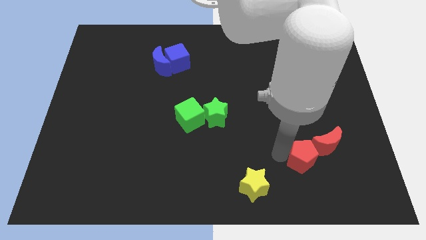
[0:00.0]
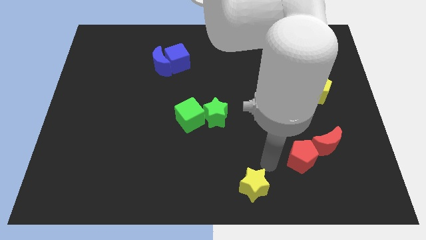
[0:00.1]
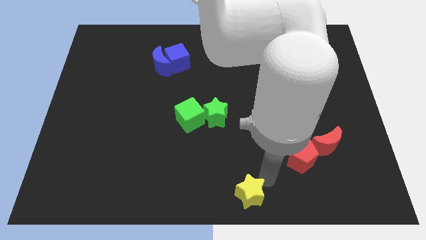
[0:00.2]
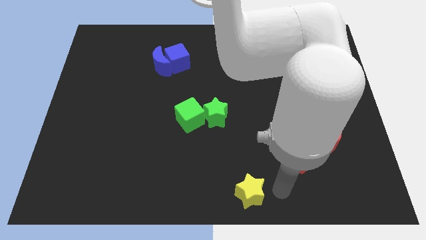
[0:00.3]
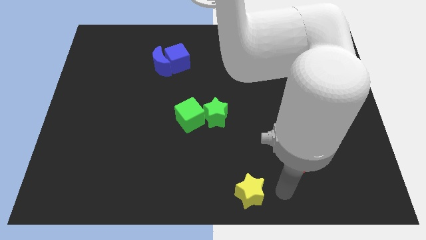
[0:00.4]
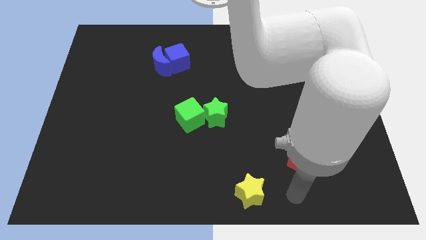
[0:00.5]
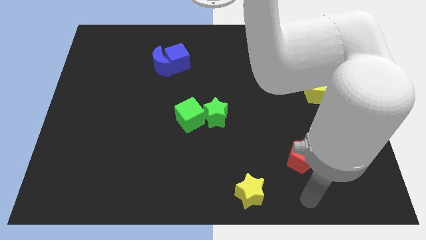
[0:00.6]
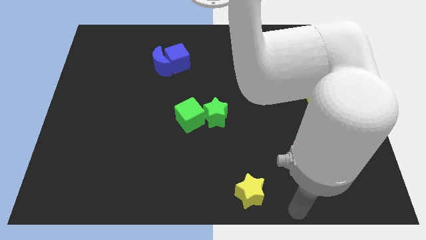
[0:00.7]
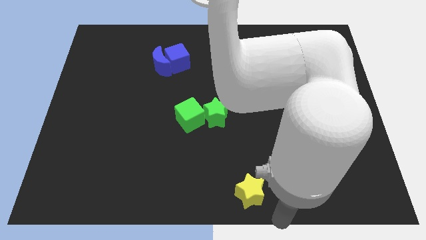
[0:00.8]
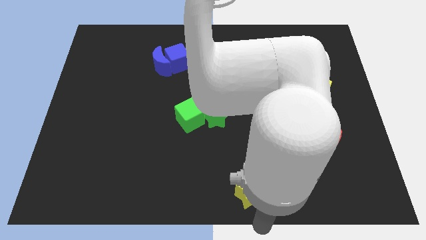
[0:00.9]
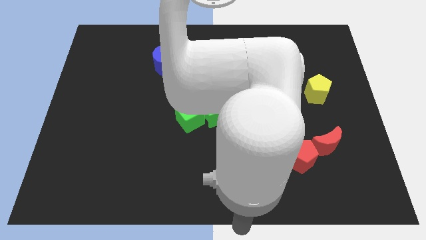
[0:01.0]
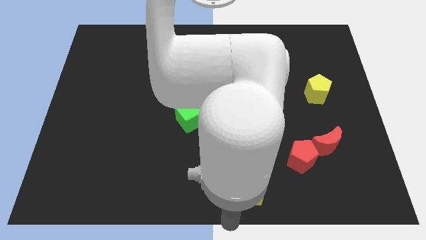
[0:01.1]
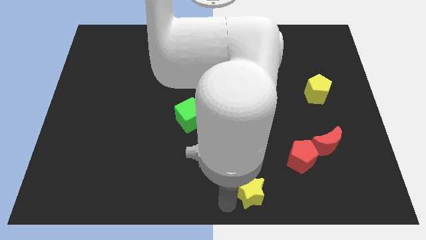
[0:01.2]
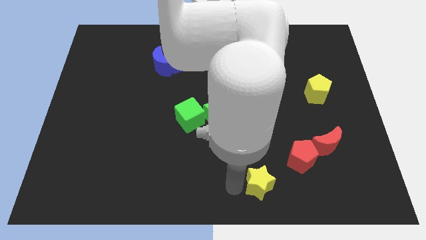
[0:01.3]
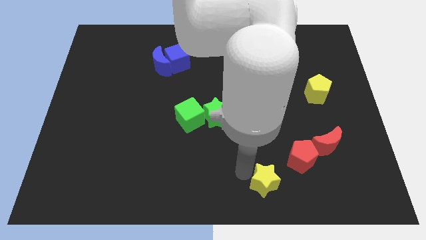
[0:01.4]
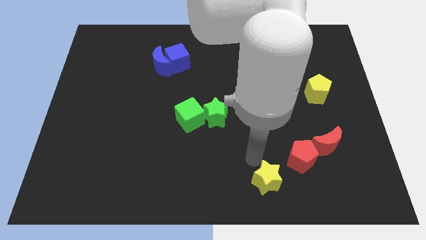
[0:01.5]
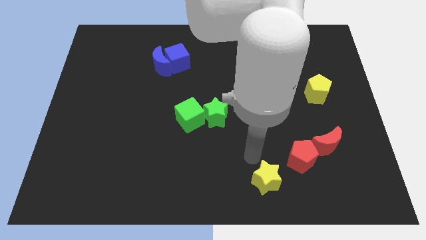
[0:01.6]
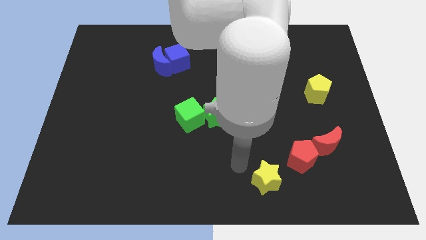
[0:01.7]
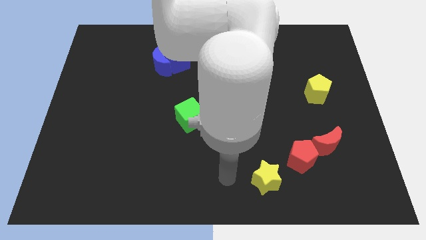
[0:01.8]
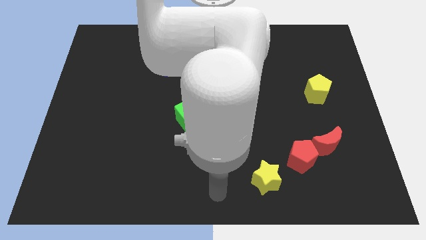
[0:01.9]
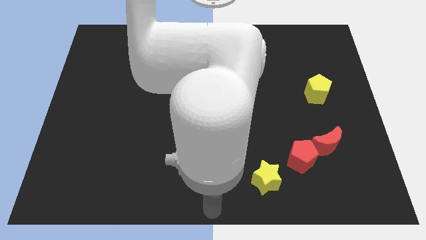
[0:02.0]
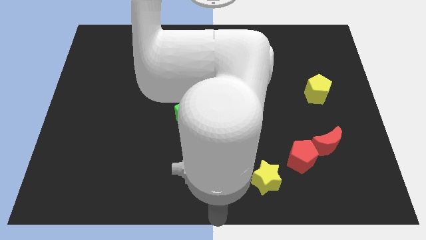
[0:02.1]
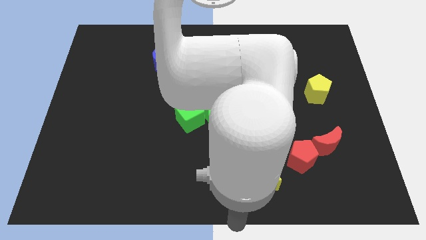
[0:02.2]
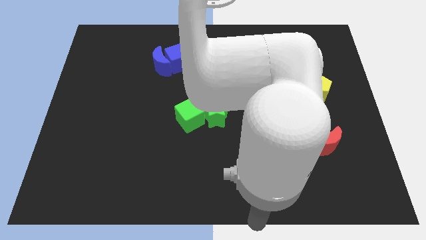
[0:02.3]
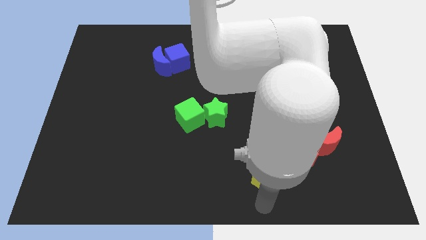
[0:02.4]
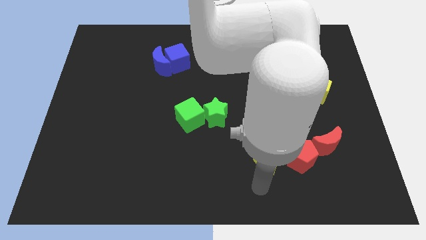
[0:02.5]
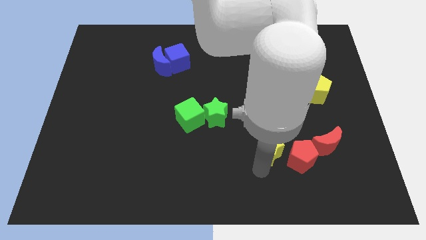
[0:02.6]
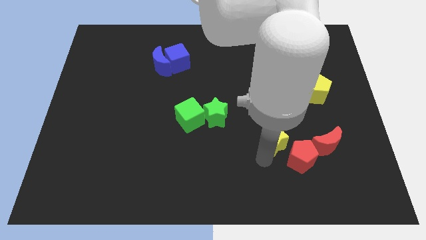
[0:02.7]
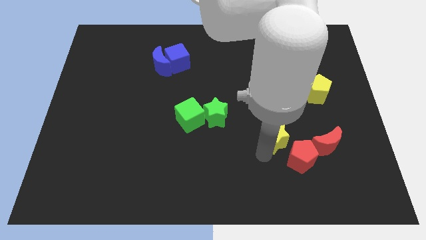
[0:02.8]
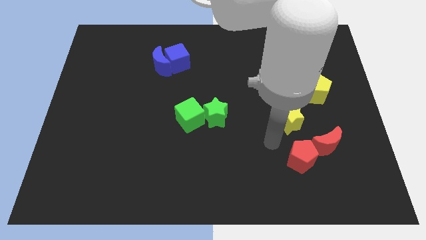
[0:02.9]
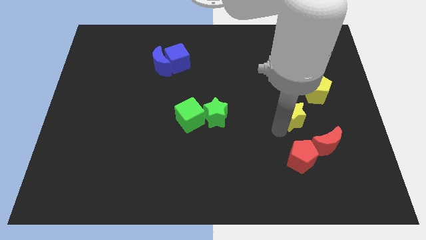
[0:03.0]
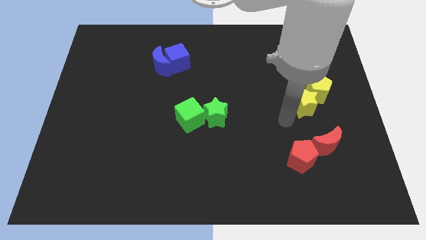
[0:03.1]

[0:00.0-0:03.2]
place the yellow star at the bottom left side of yellow pentagon

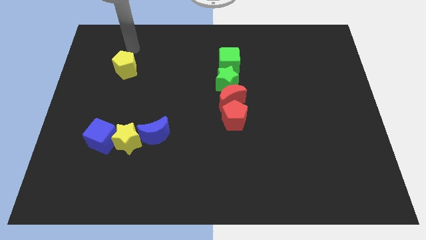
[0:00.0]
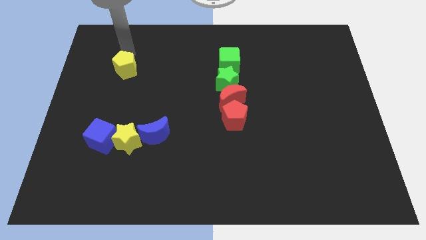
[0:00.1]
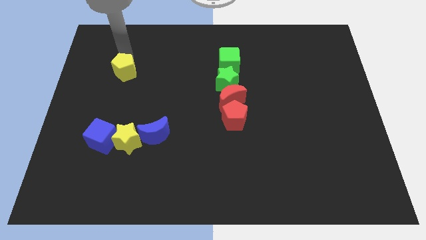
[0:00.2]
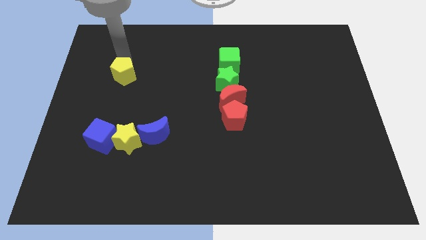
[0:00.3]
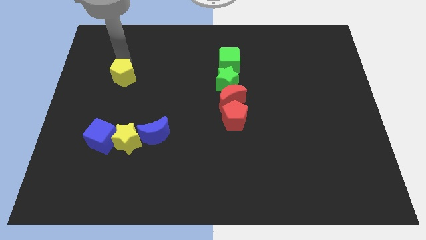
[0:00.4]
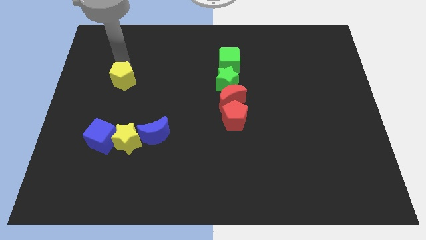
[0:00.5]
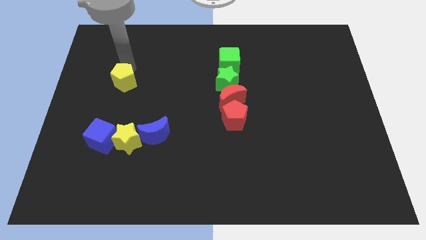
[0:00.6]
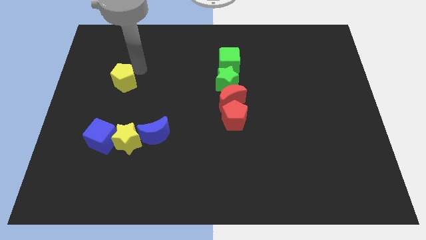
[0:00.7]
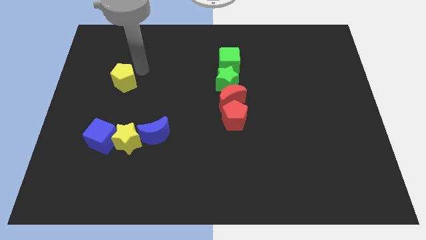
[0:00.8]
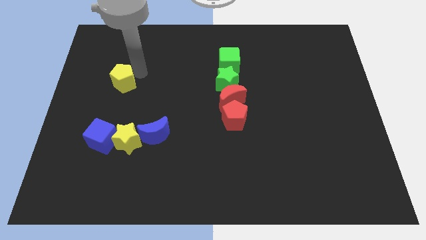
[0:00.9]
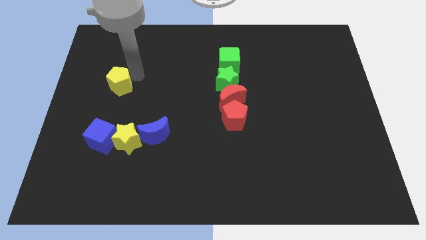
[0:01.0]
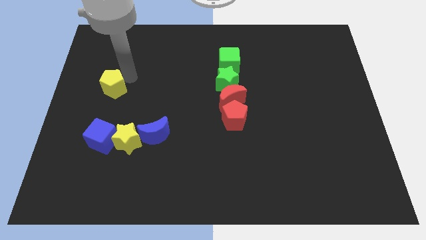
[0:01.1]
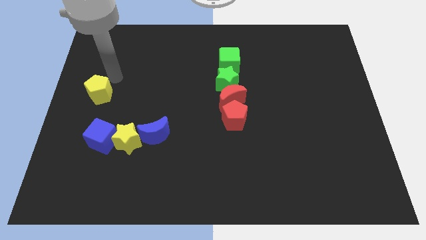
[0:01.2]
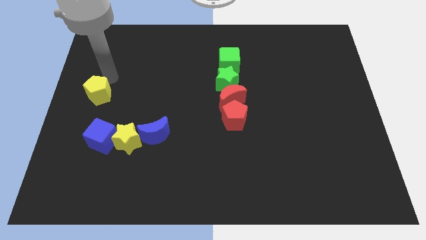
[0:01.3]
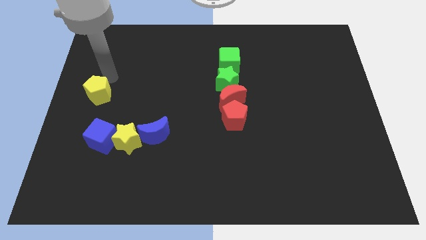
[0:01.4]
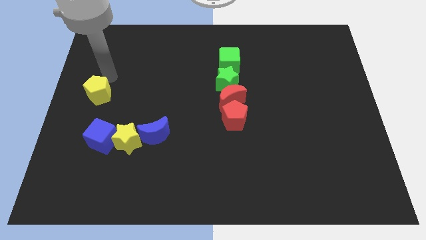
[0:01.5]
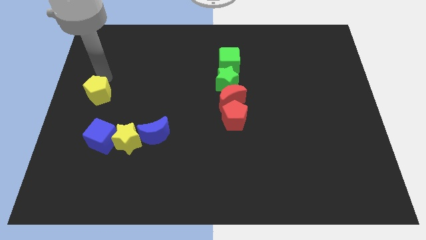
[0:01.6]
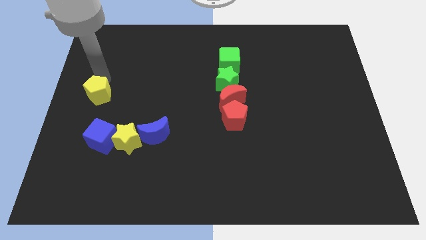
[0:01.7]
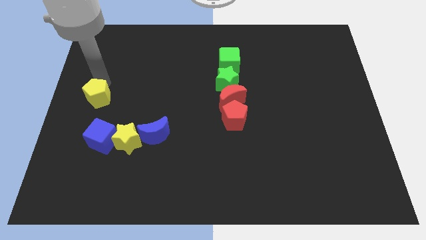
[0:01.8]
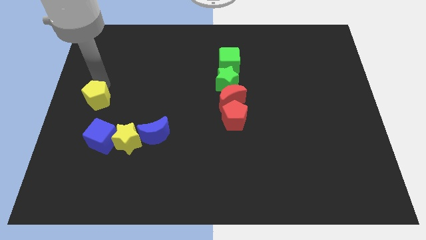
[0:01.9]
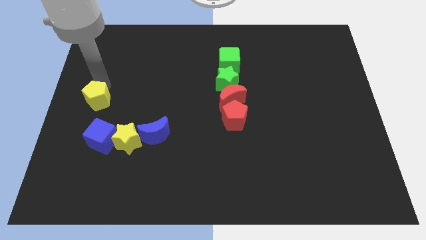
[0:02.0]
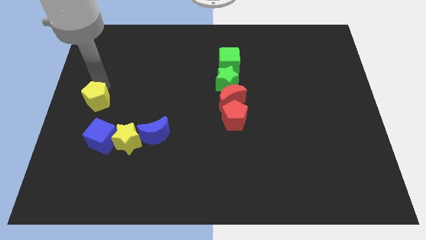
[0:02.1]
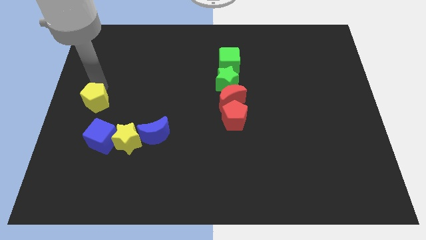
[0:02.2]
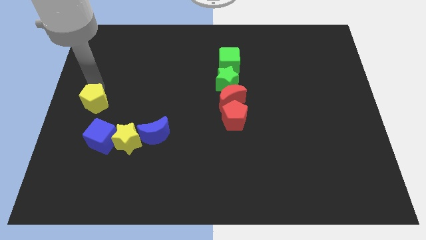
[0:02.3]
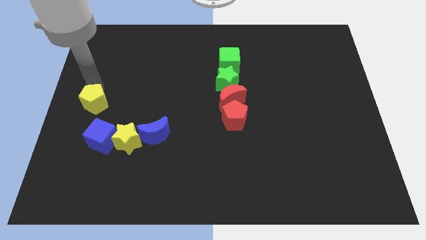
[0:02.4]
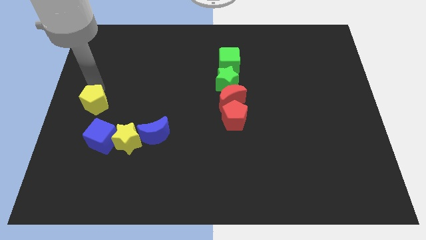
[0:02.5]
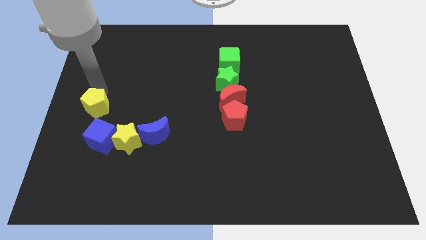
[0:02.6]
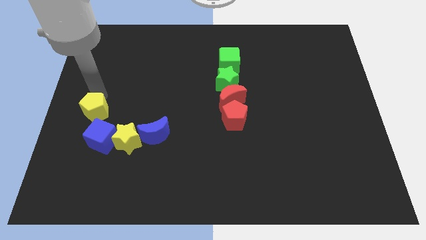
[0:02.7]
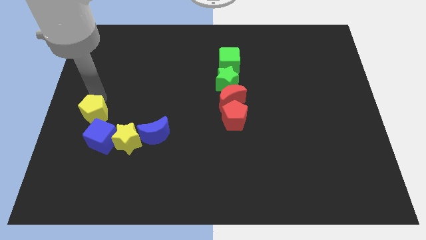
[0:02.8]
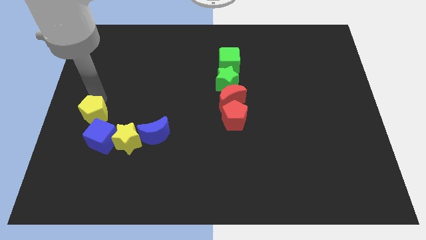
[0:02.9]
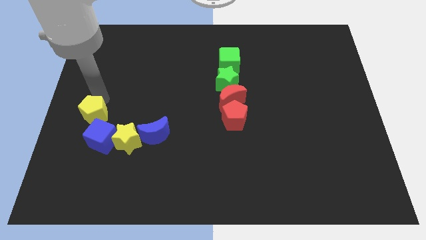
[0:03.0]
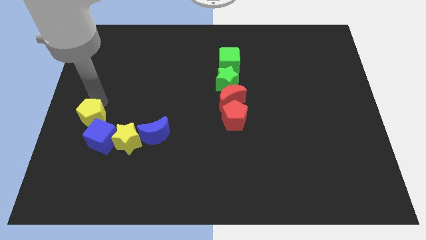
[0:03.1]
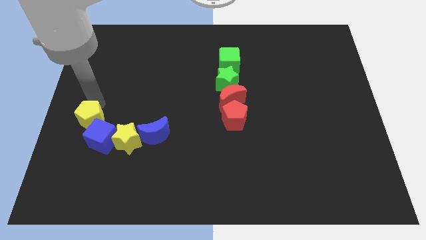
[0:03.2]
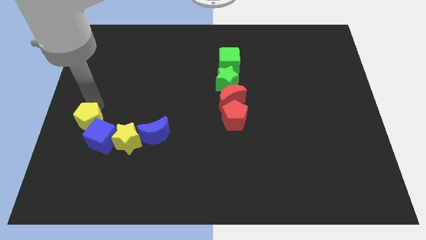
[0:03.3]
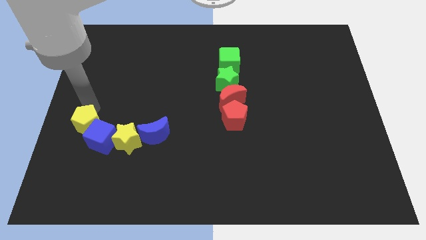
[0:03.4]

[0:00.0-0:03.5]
make the yellow pentagon to touch the left side of the blue cube

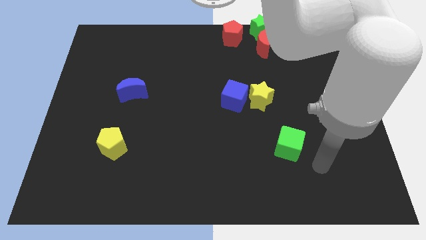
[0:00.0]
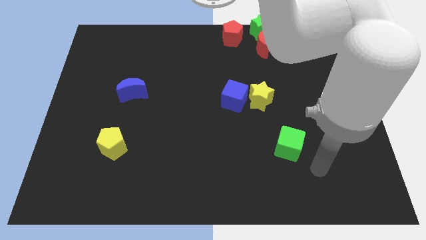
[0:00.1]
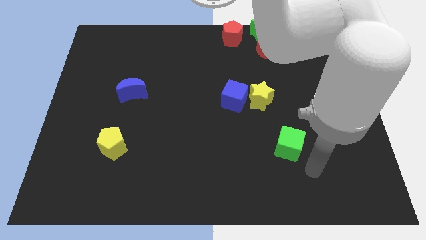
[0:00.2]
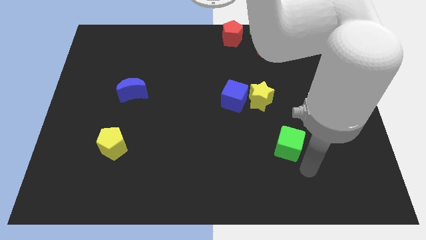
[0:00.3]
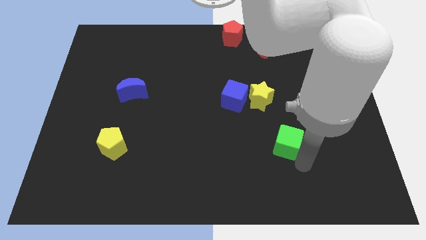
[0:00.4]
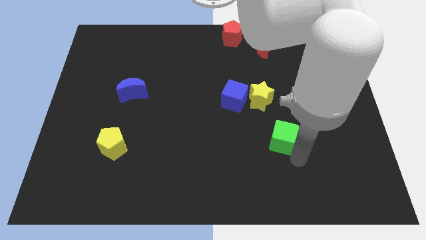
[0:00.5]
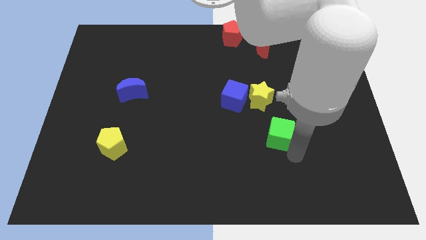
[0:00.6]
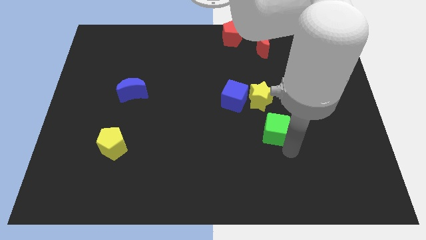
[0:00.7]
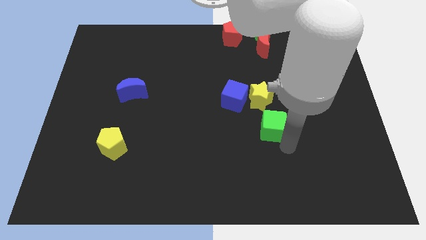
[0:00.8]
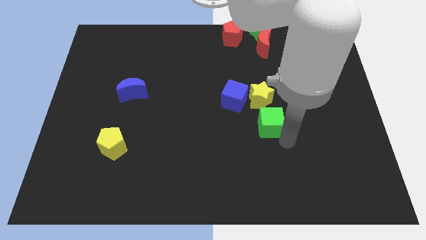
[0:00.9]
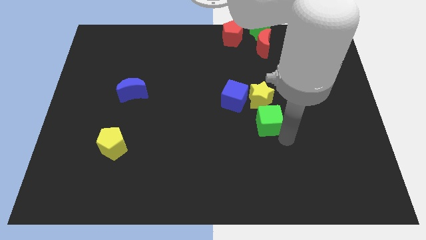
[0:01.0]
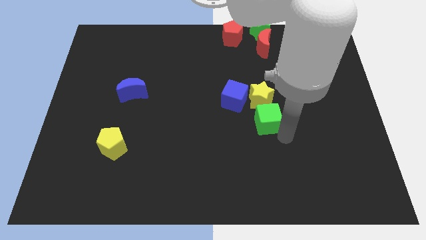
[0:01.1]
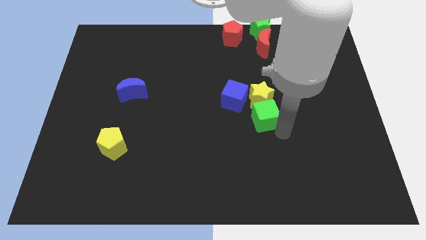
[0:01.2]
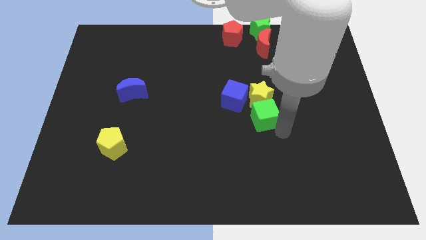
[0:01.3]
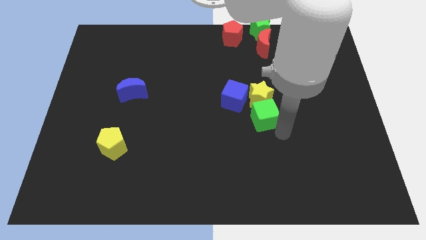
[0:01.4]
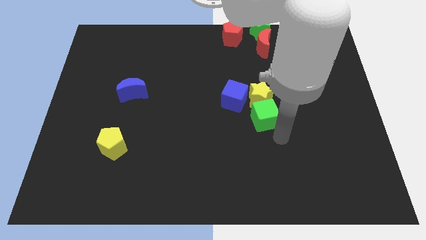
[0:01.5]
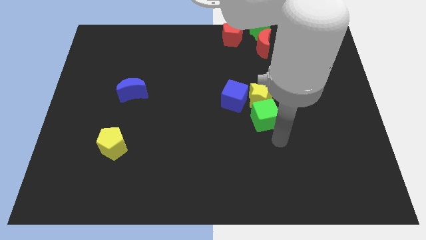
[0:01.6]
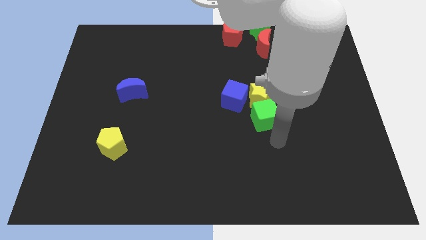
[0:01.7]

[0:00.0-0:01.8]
push the green cube into the yellow star

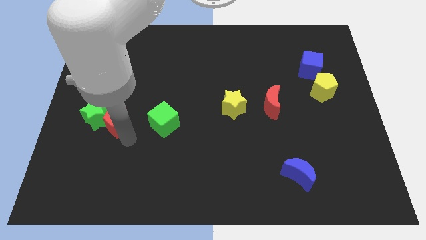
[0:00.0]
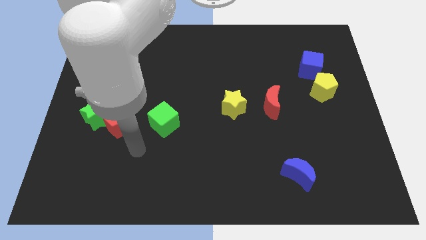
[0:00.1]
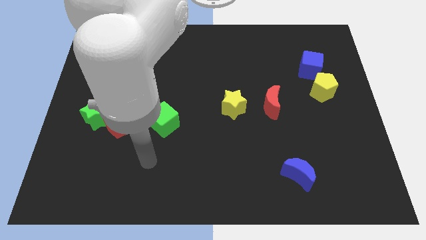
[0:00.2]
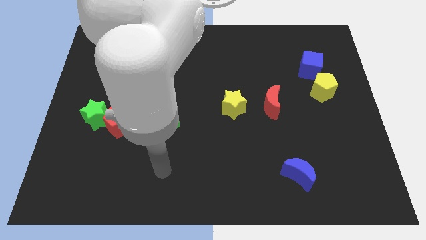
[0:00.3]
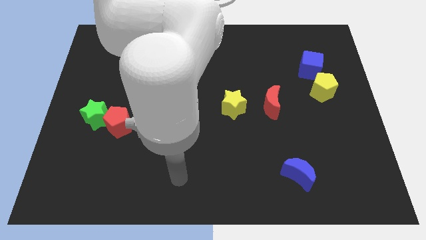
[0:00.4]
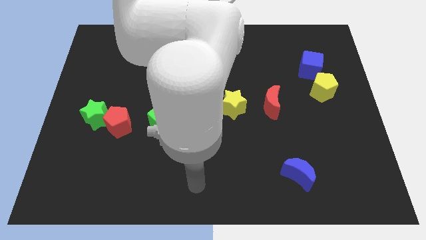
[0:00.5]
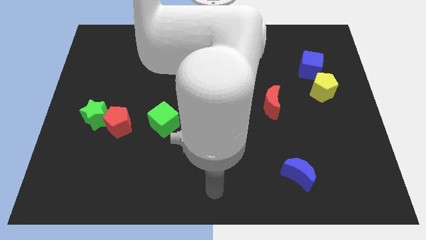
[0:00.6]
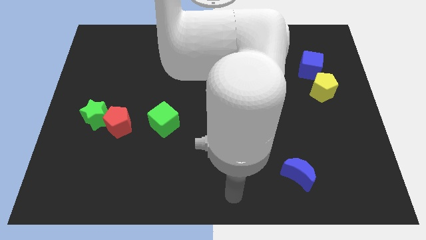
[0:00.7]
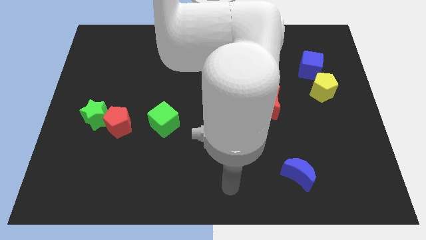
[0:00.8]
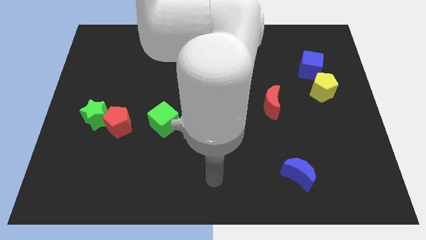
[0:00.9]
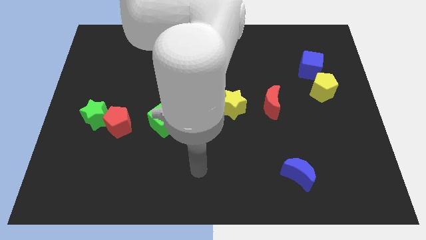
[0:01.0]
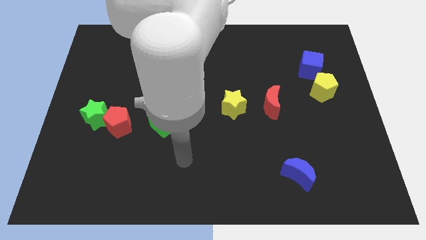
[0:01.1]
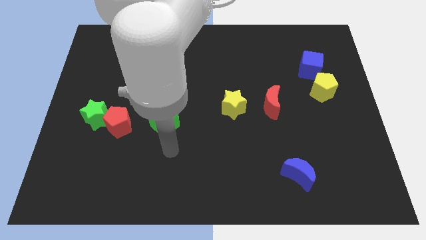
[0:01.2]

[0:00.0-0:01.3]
move your hand away from the red pentagon
